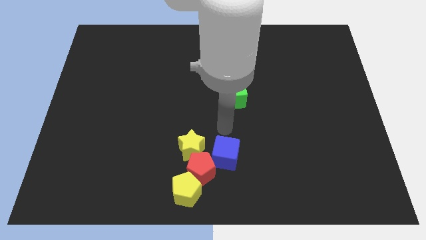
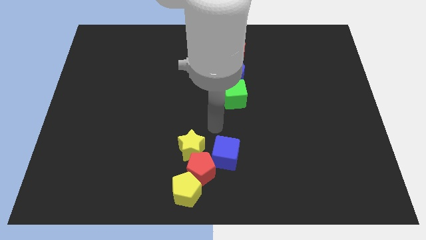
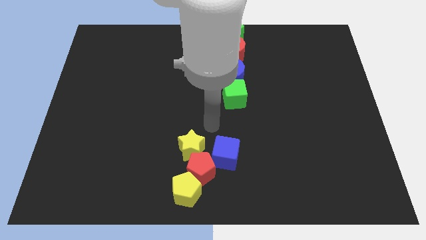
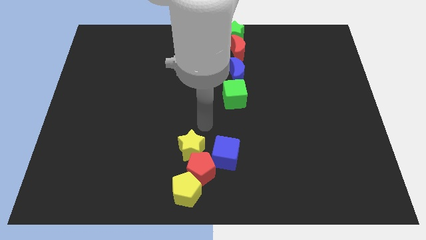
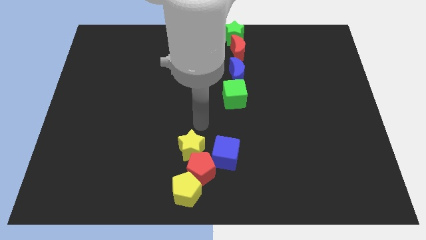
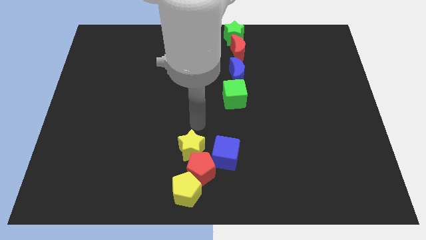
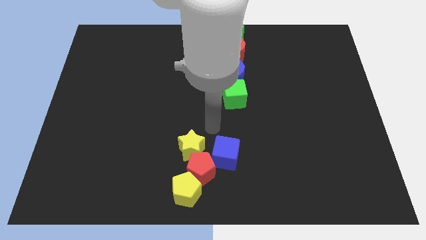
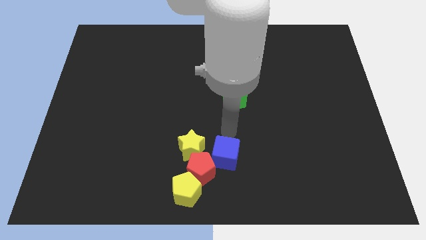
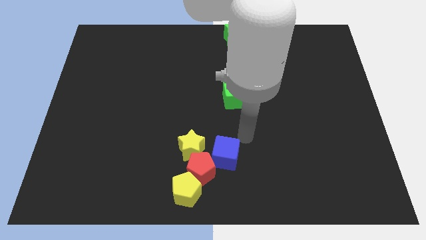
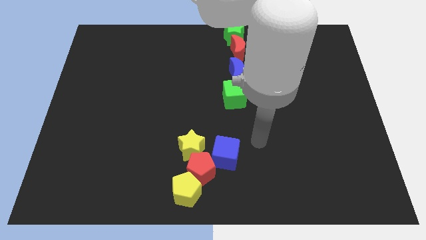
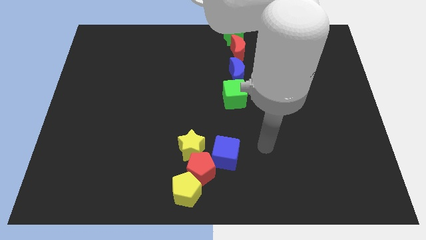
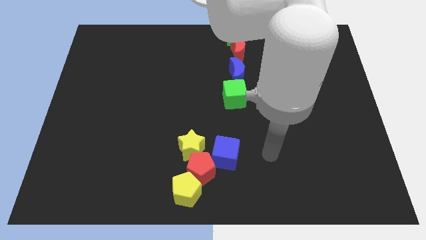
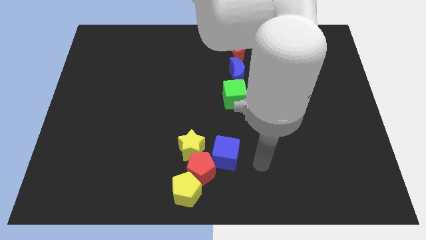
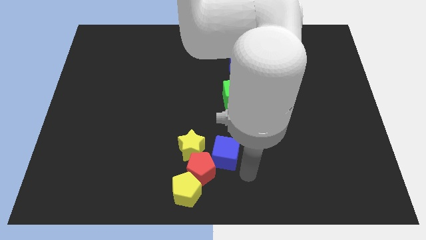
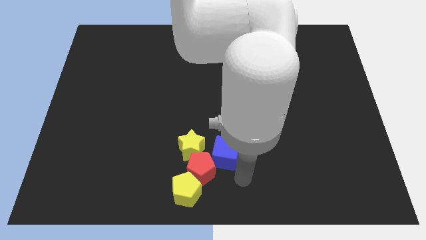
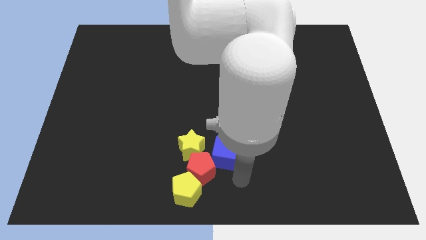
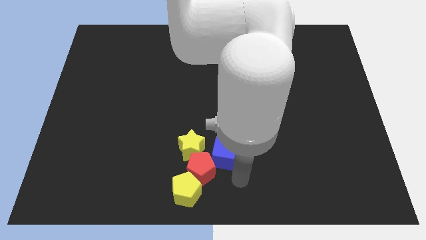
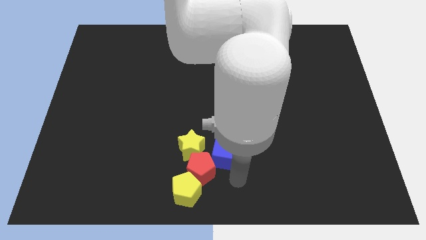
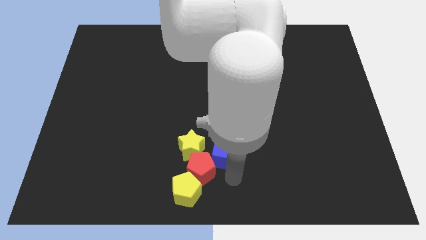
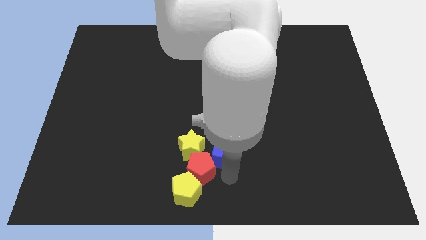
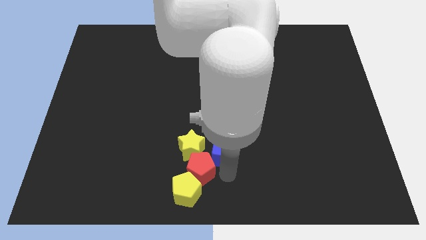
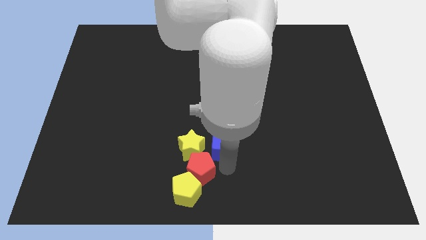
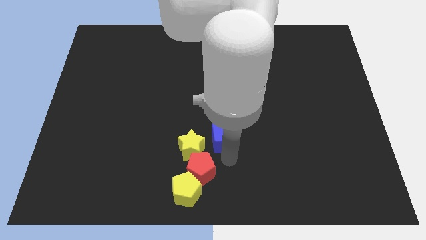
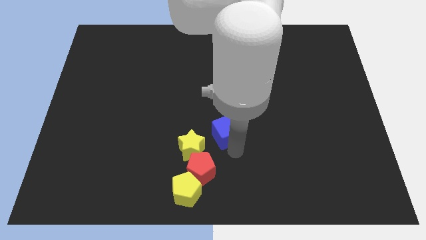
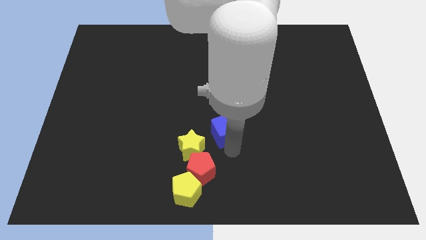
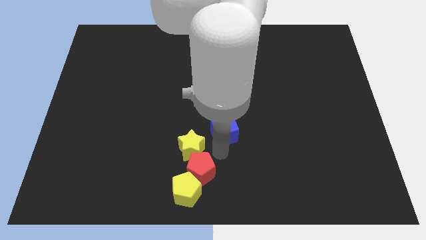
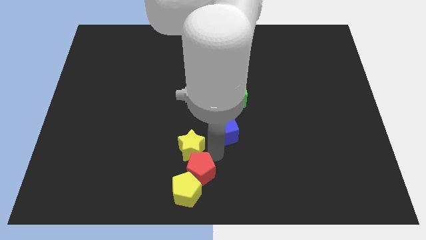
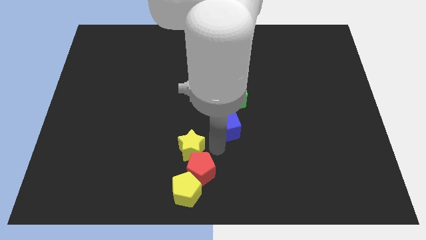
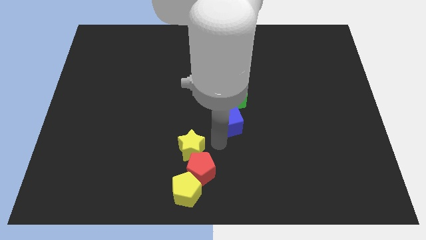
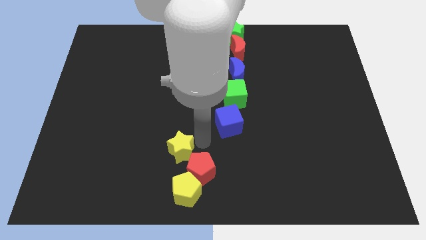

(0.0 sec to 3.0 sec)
move the blue cube slightly to the top

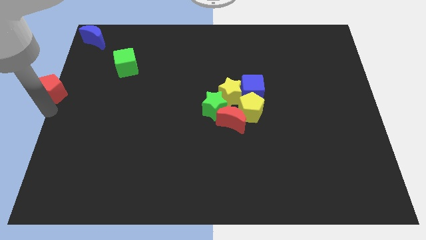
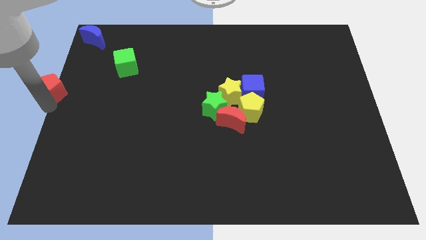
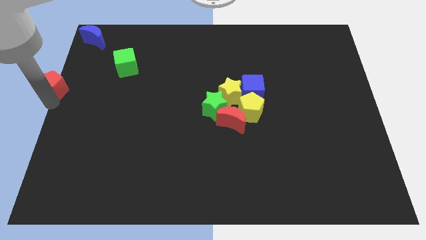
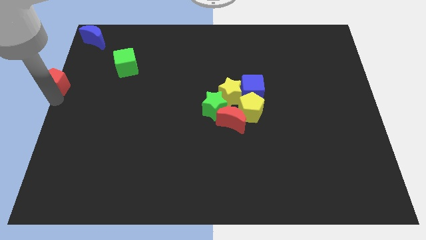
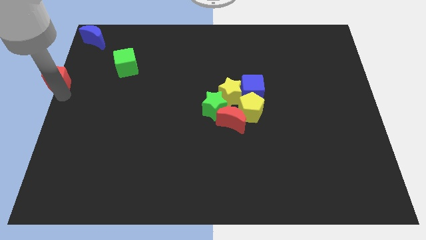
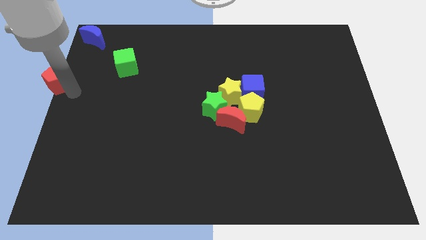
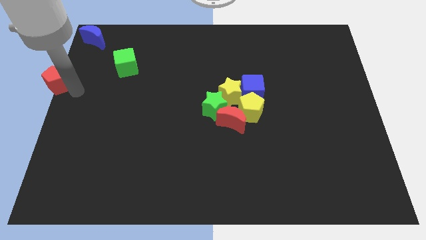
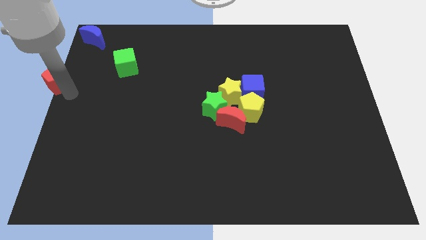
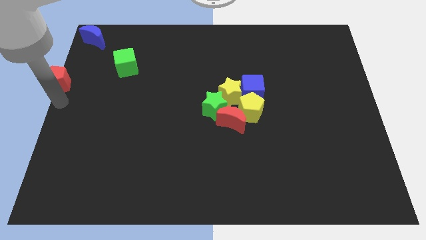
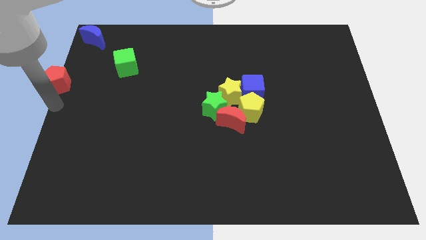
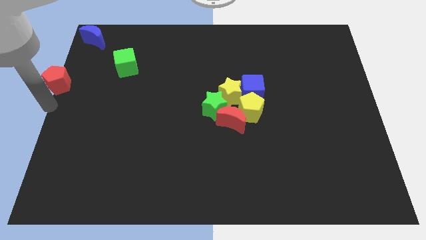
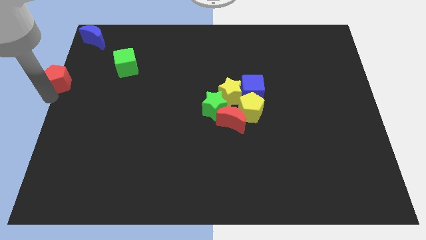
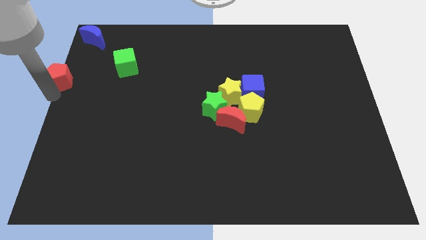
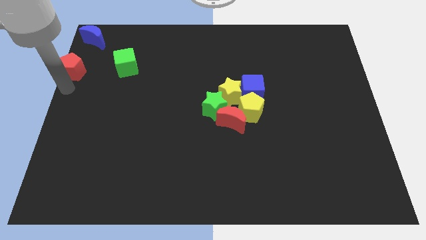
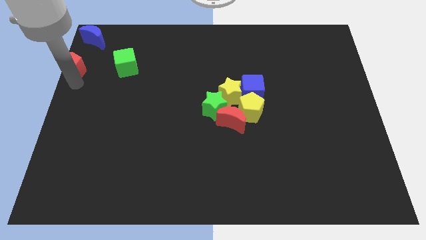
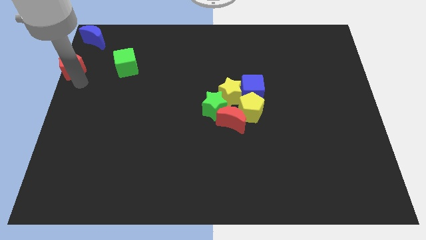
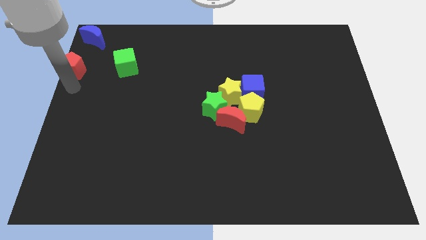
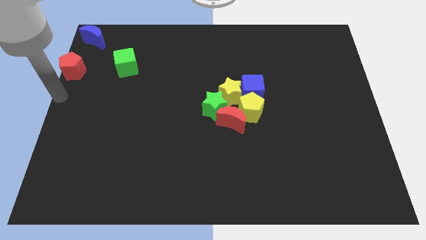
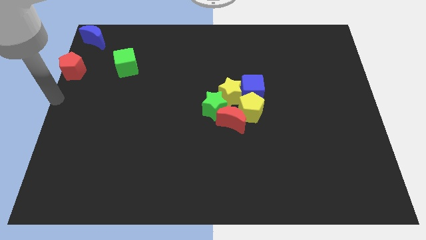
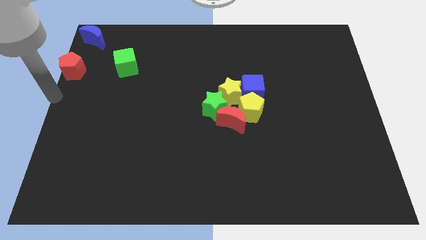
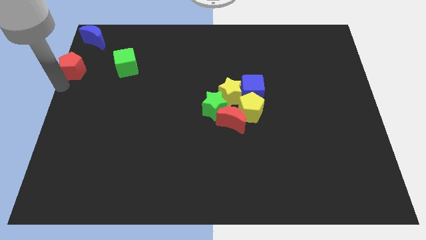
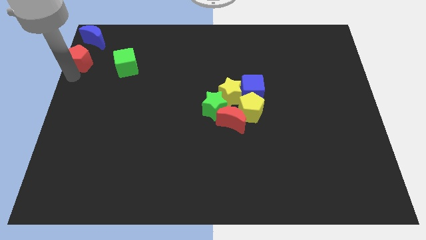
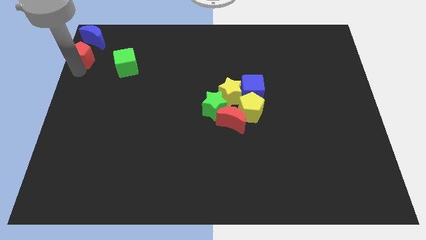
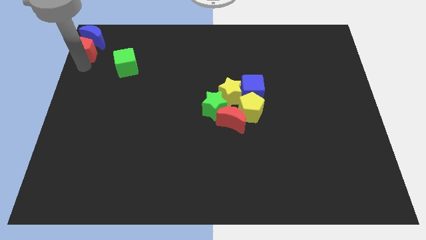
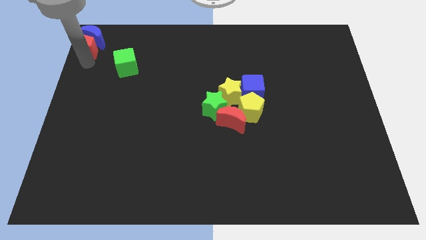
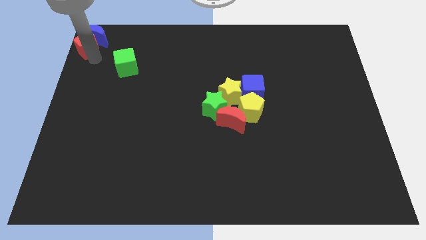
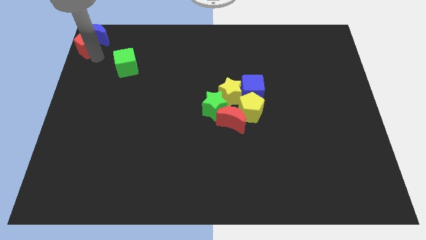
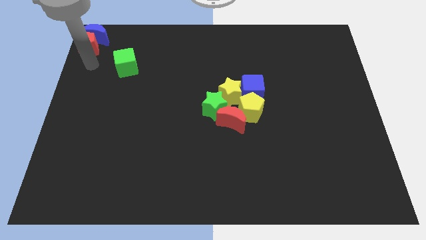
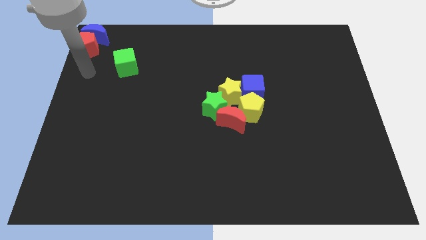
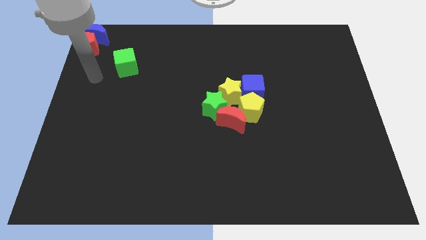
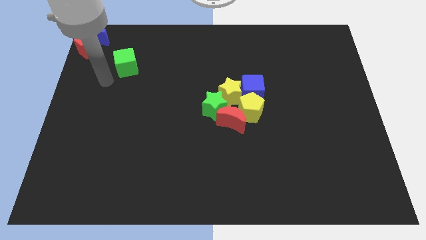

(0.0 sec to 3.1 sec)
move red pentagon below the blue moon

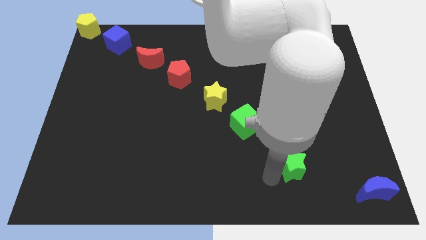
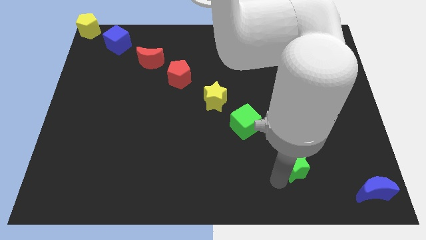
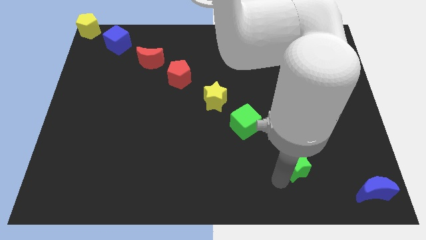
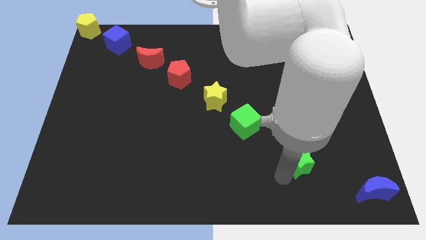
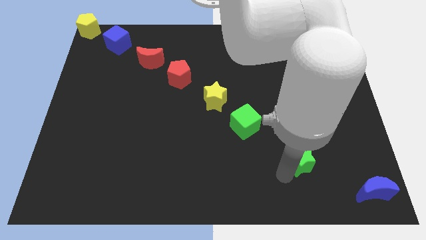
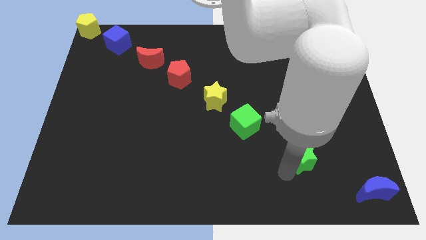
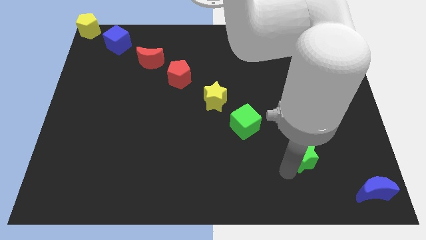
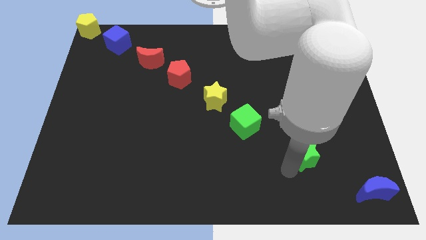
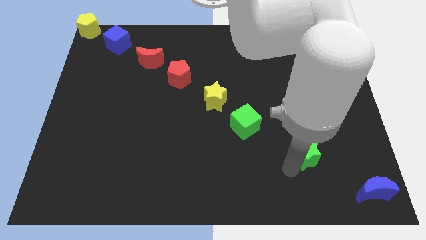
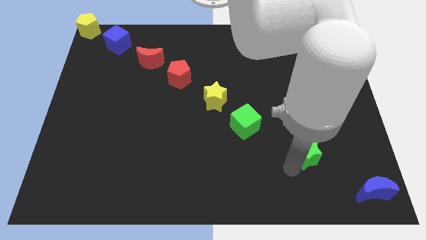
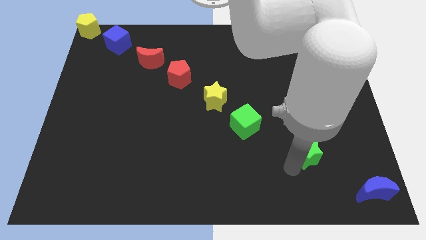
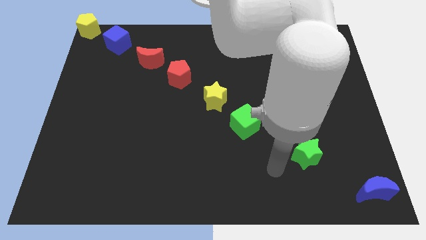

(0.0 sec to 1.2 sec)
push the green star to the bottom right side of the green cube

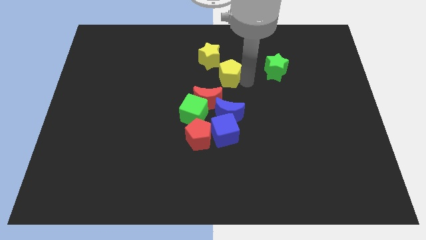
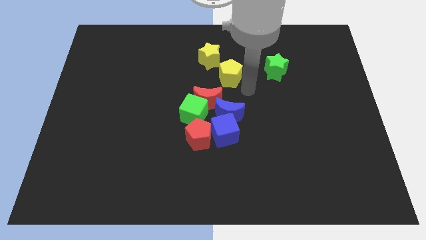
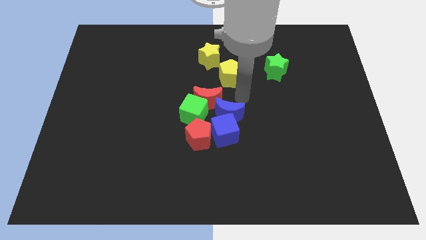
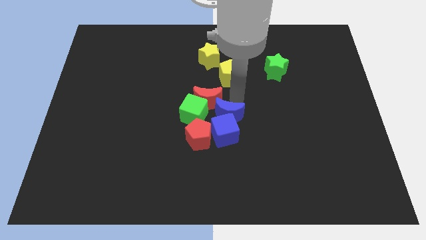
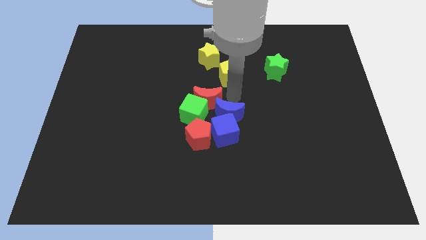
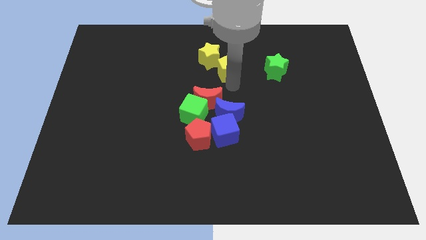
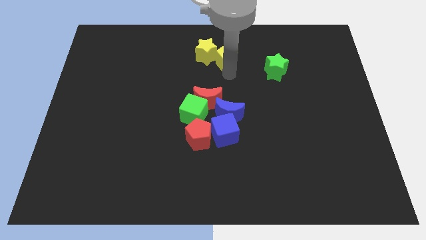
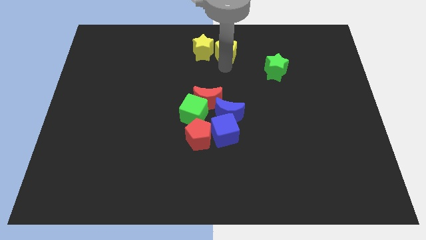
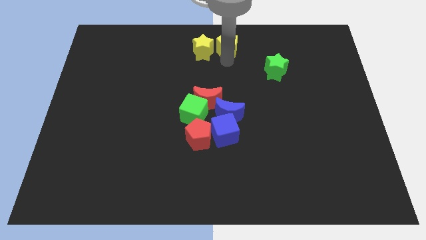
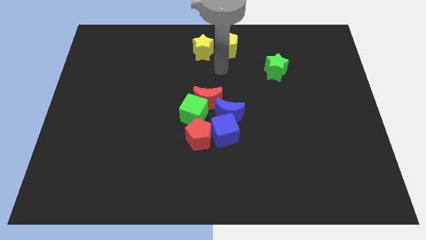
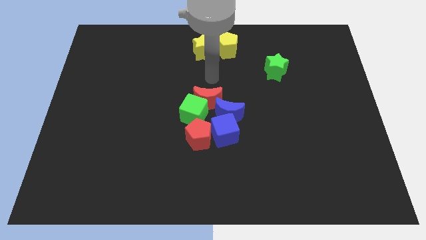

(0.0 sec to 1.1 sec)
place yellow pentagon to the yellow star

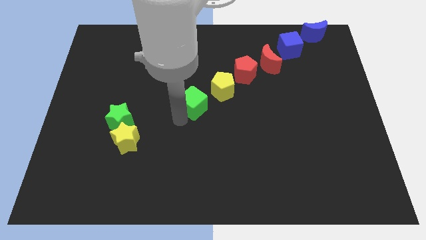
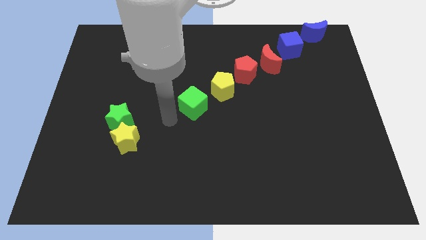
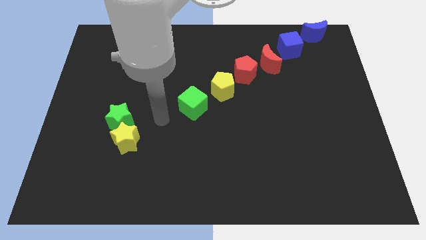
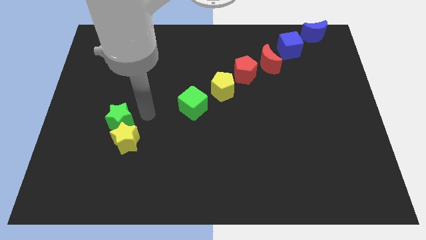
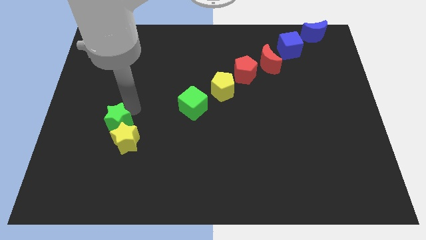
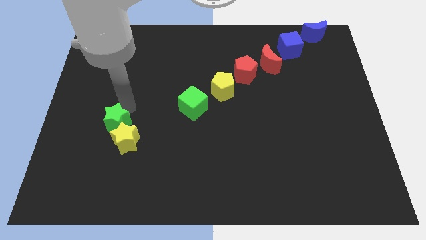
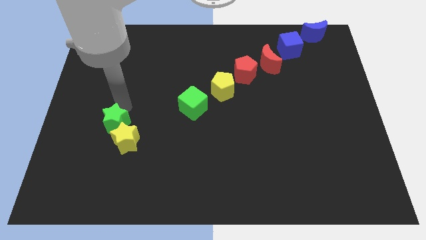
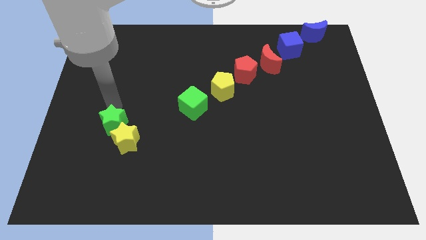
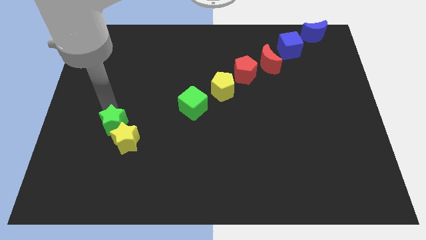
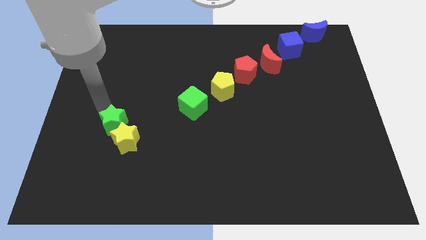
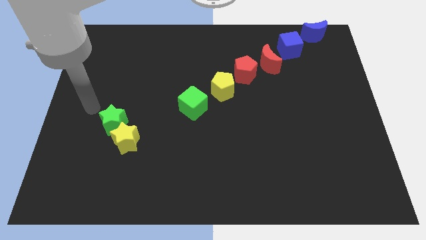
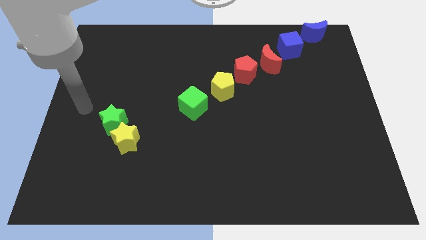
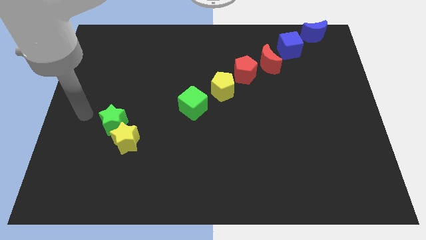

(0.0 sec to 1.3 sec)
slightly push the green star towards the left side of the board
